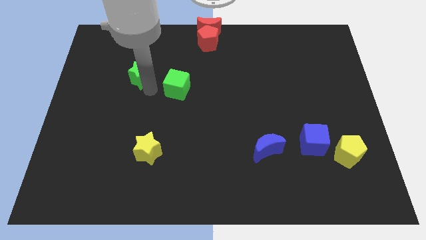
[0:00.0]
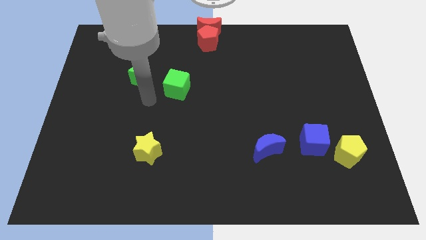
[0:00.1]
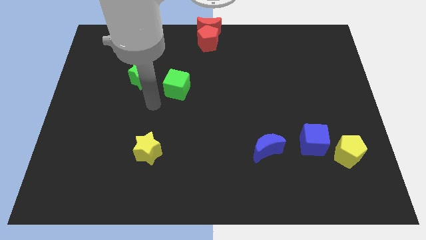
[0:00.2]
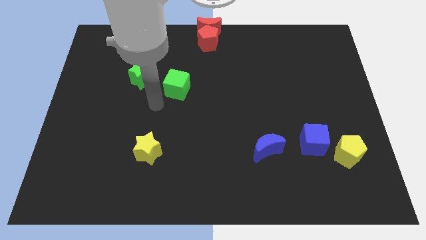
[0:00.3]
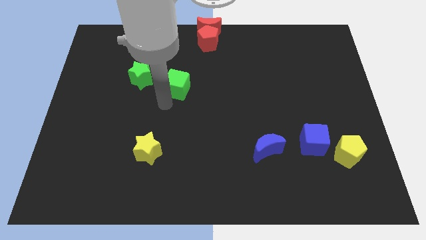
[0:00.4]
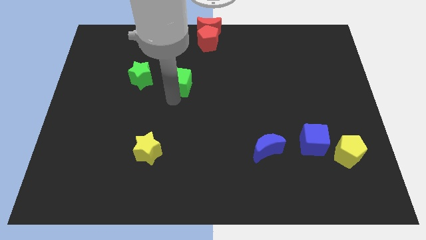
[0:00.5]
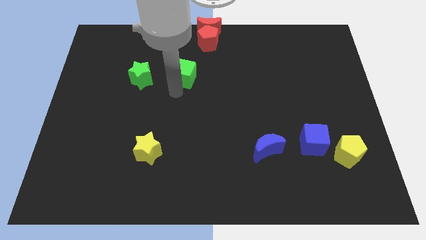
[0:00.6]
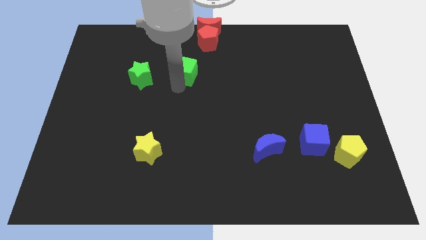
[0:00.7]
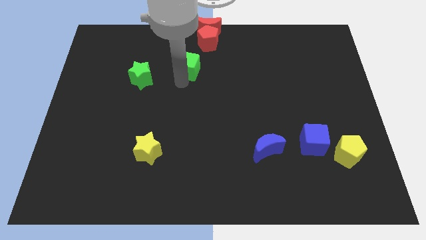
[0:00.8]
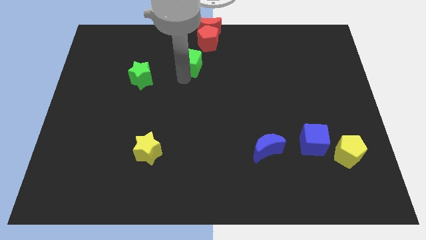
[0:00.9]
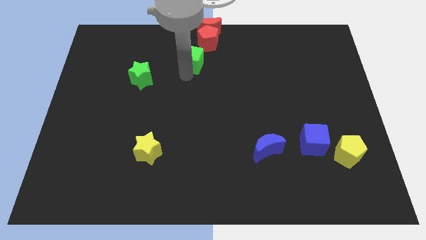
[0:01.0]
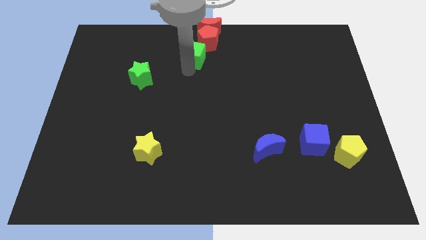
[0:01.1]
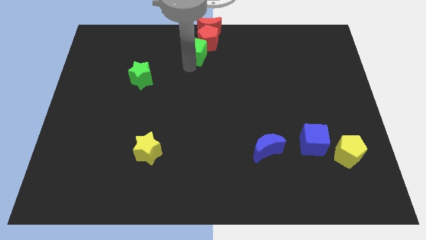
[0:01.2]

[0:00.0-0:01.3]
separate green cube from green star

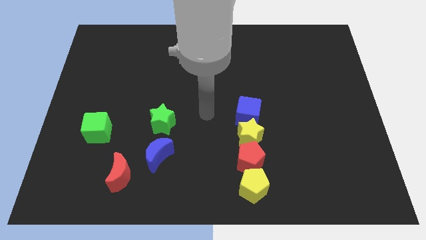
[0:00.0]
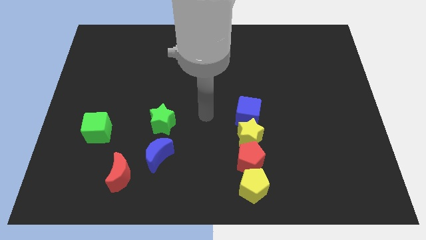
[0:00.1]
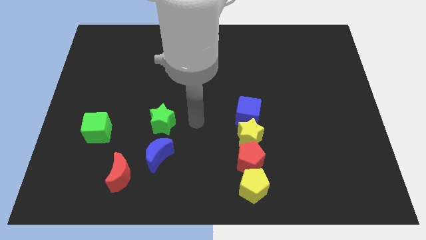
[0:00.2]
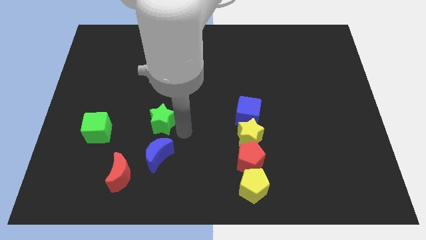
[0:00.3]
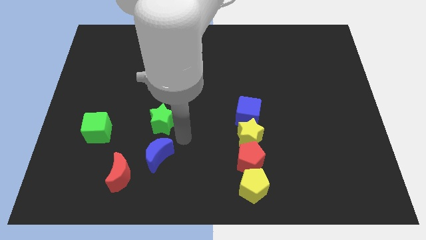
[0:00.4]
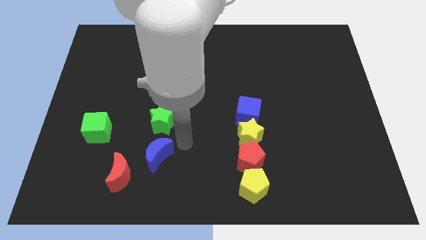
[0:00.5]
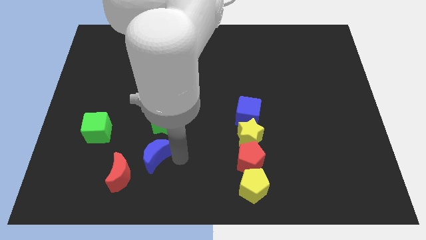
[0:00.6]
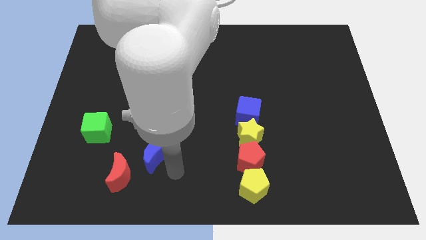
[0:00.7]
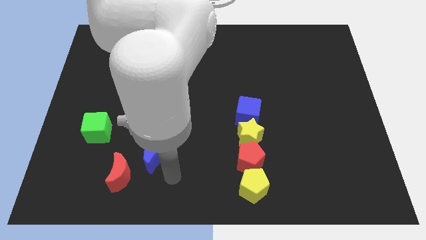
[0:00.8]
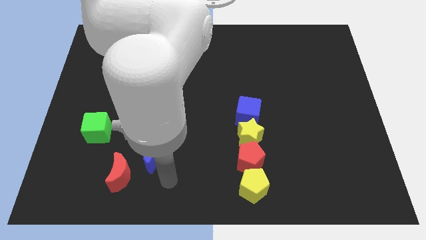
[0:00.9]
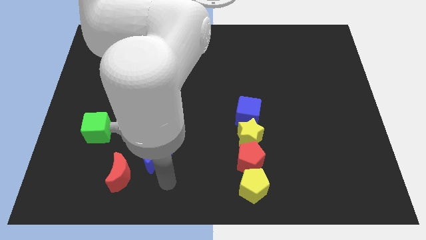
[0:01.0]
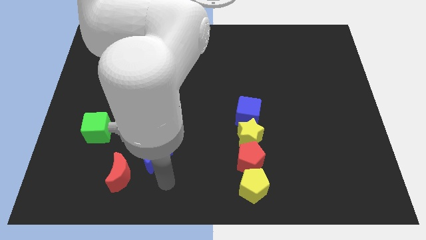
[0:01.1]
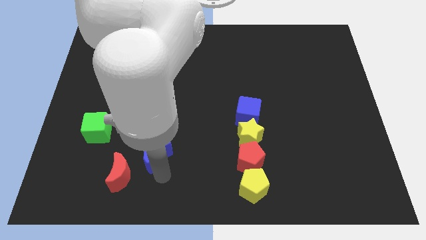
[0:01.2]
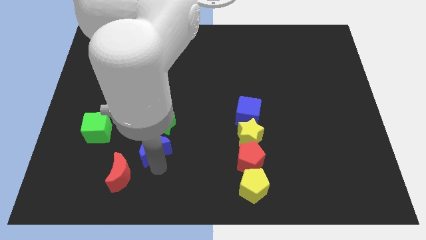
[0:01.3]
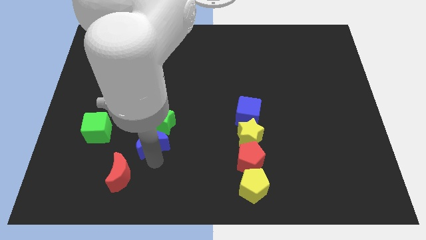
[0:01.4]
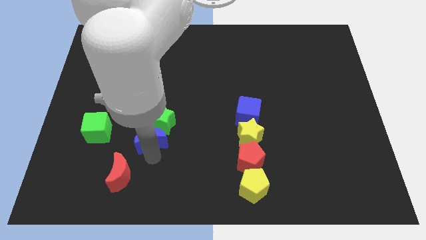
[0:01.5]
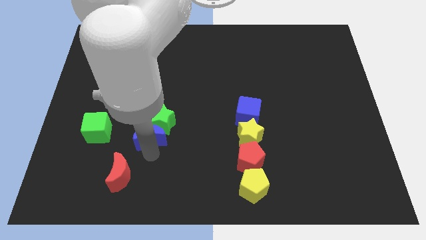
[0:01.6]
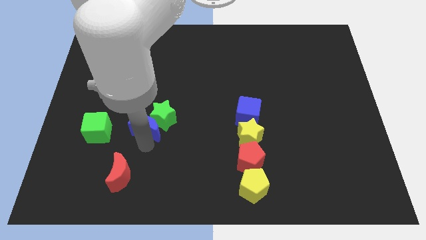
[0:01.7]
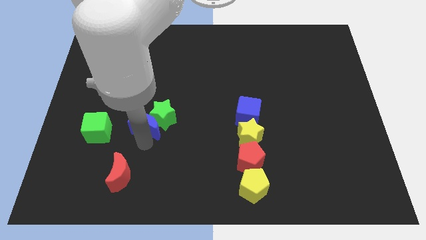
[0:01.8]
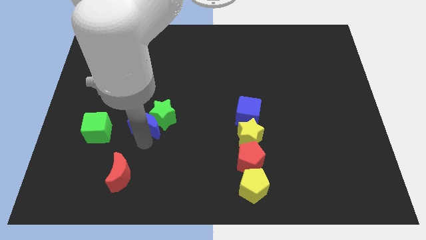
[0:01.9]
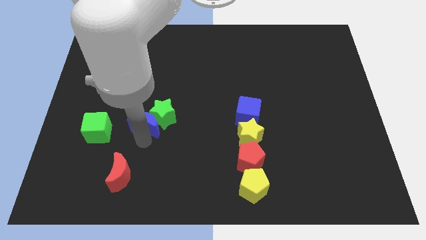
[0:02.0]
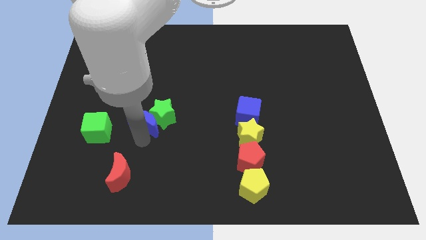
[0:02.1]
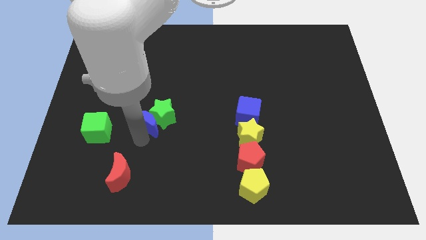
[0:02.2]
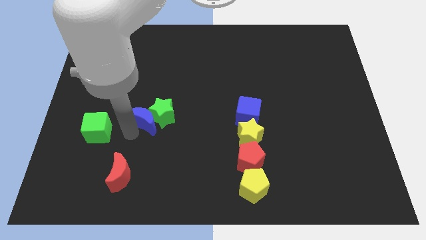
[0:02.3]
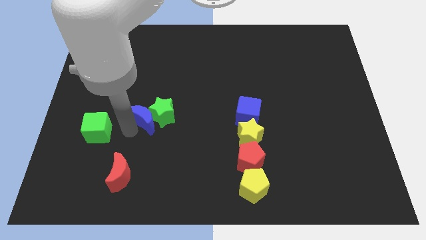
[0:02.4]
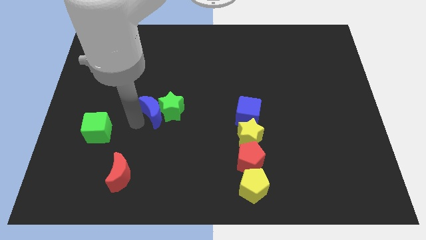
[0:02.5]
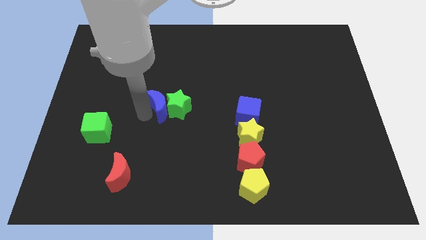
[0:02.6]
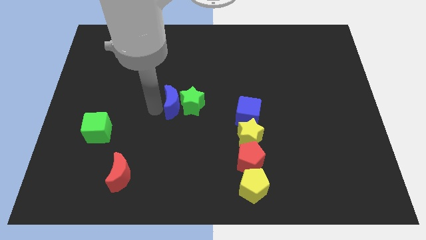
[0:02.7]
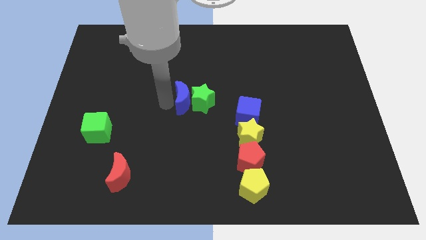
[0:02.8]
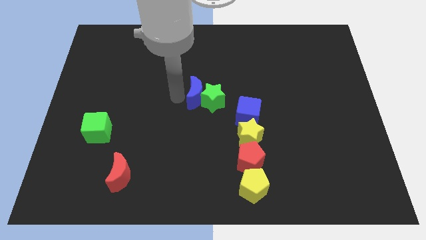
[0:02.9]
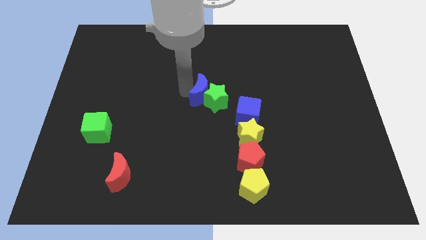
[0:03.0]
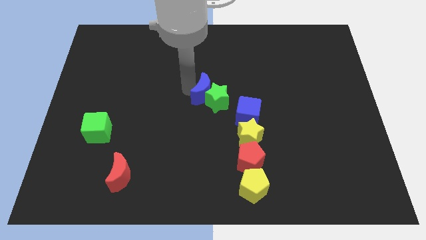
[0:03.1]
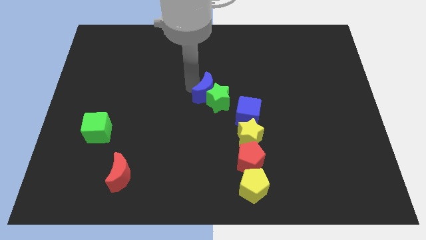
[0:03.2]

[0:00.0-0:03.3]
push the blue crescent into the green star

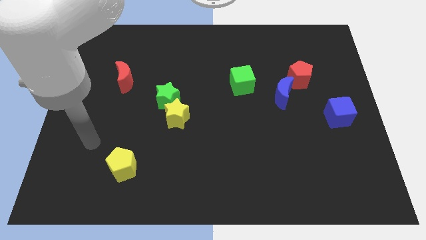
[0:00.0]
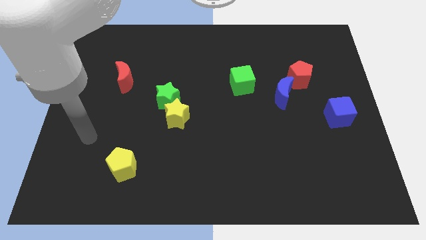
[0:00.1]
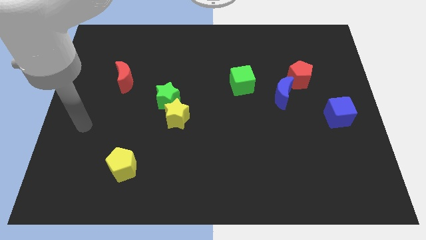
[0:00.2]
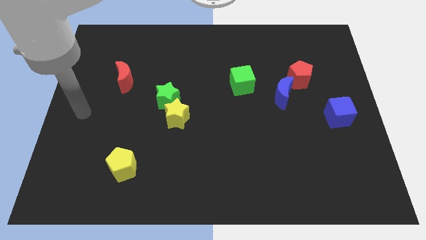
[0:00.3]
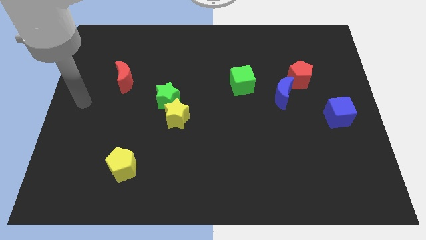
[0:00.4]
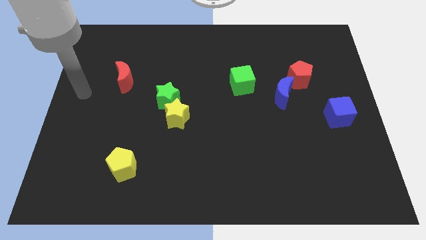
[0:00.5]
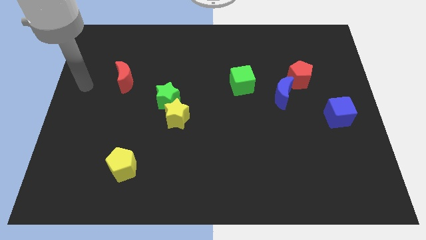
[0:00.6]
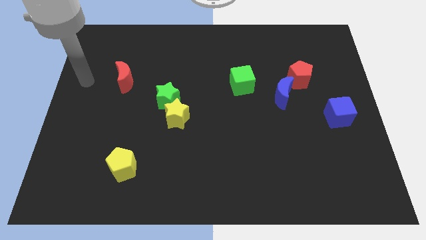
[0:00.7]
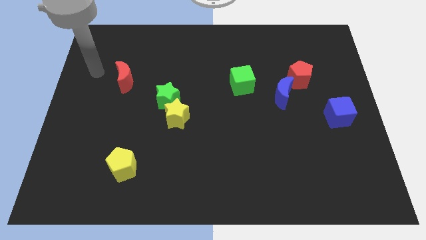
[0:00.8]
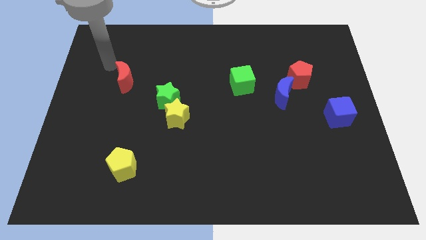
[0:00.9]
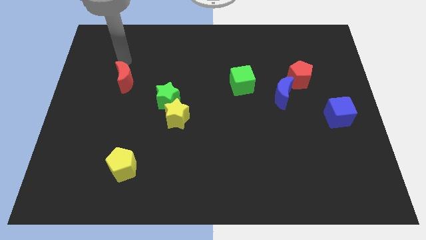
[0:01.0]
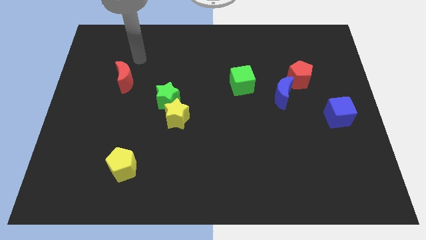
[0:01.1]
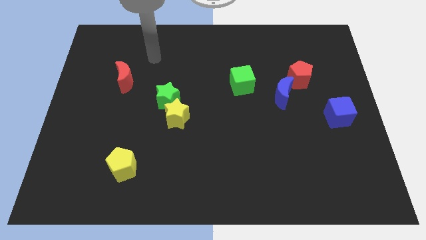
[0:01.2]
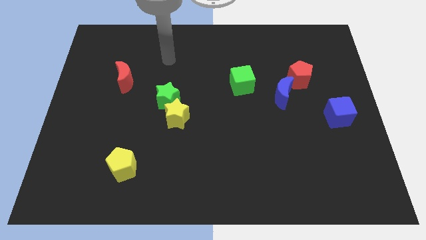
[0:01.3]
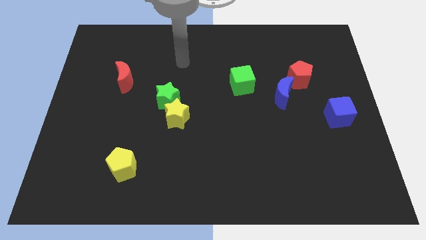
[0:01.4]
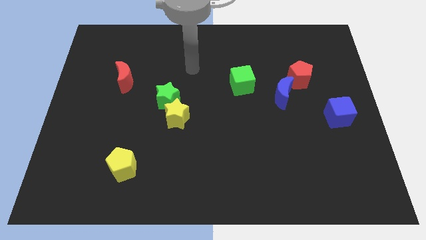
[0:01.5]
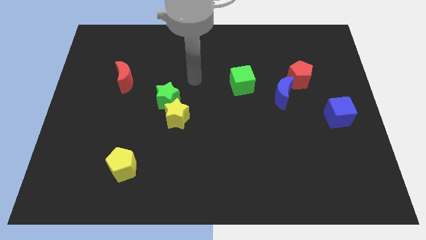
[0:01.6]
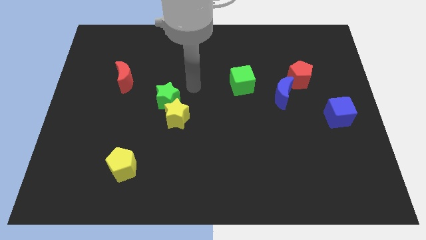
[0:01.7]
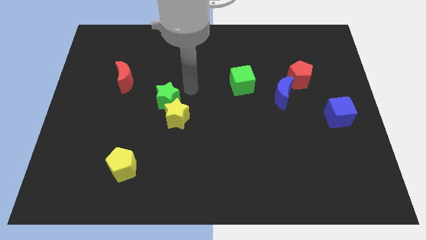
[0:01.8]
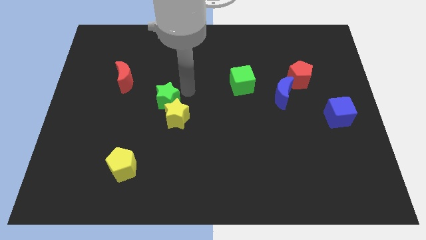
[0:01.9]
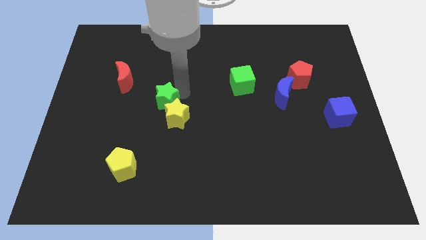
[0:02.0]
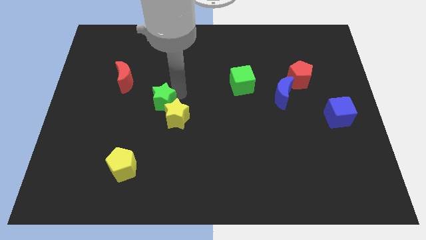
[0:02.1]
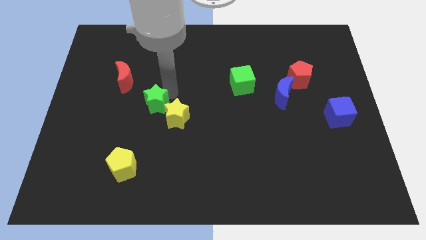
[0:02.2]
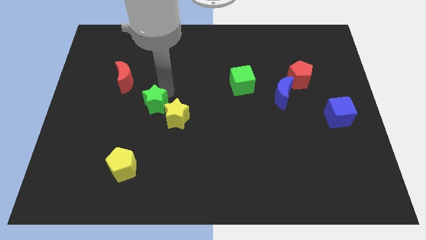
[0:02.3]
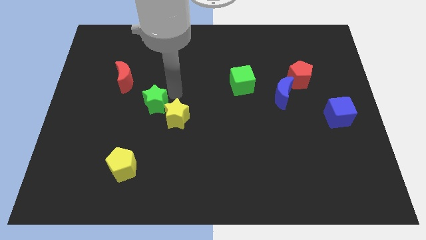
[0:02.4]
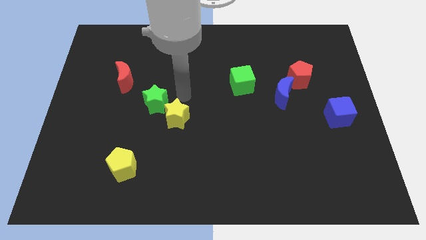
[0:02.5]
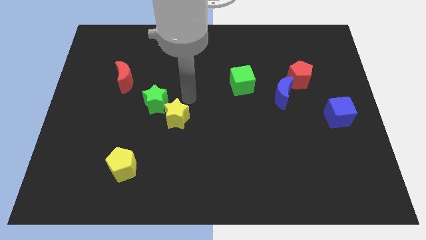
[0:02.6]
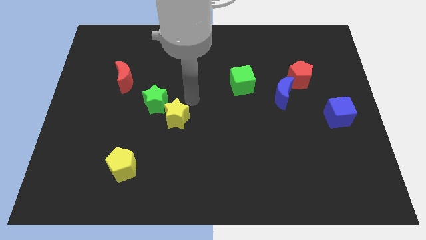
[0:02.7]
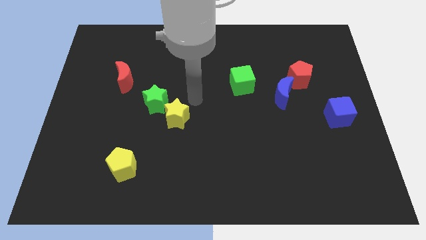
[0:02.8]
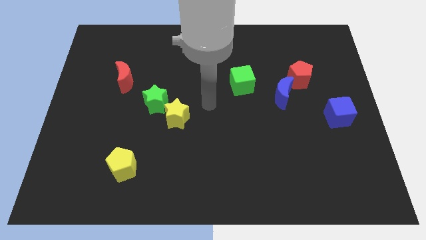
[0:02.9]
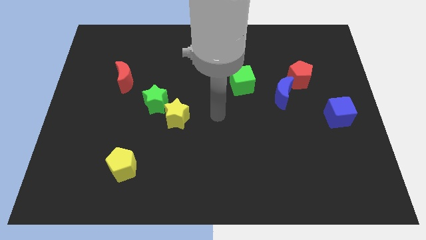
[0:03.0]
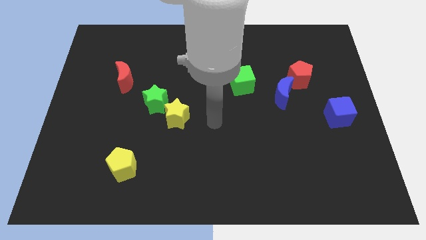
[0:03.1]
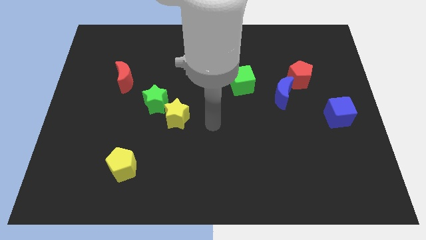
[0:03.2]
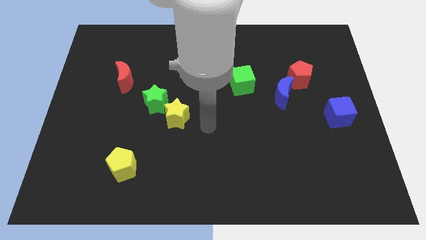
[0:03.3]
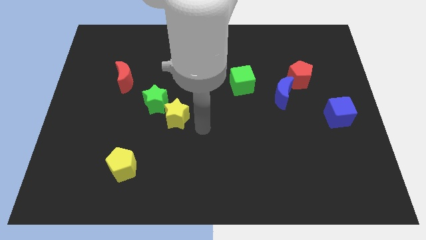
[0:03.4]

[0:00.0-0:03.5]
move the green star to the top left side of the yellow star

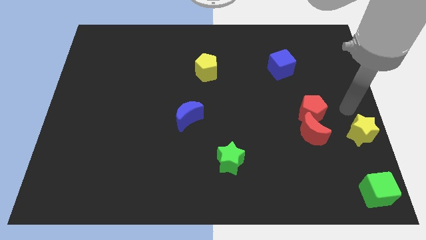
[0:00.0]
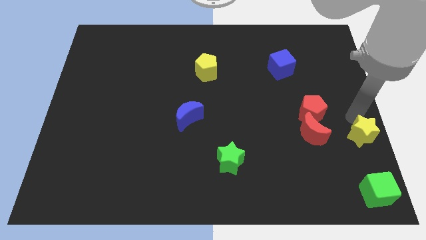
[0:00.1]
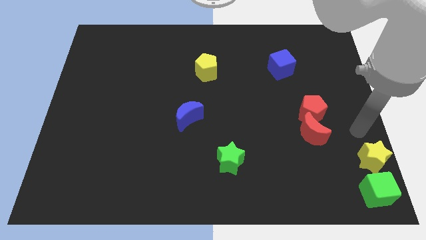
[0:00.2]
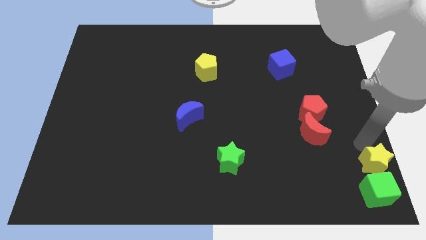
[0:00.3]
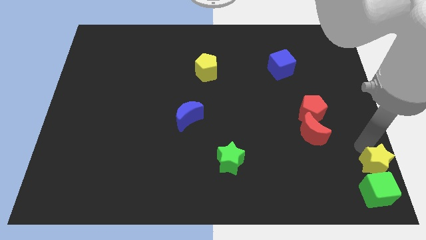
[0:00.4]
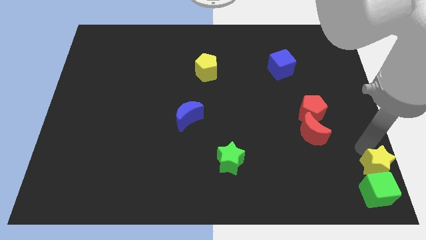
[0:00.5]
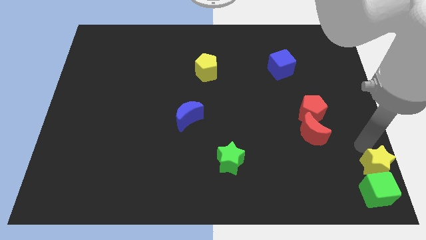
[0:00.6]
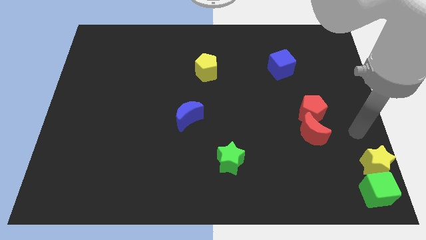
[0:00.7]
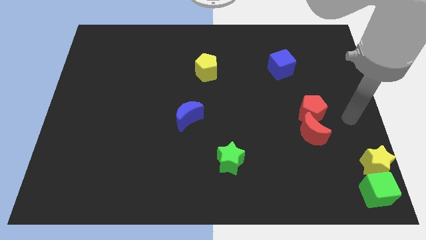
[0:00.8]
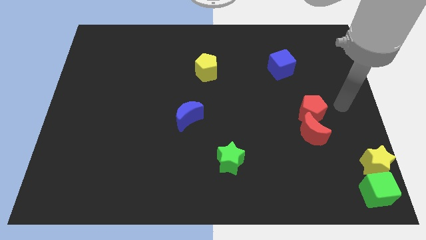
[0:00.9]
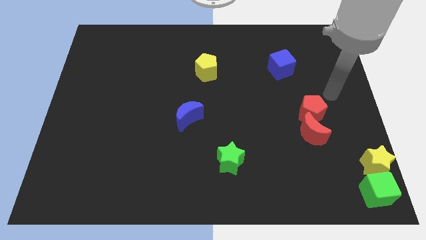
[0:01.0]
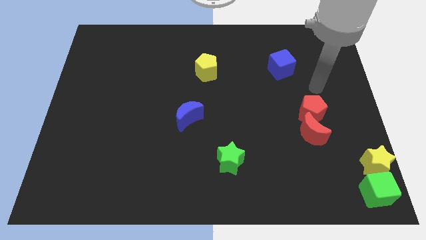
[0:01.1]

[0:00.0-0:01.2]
place the yellow star to the top of the green cube
